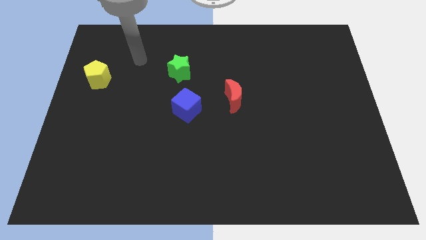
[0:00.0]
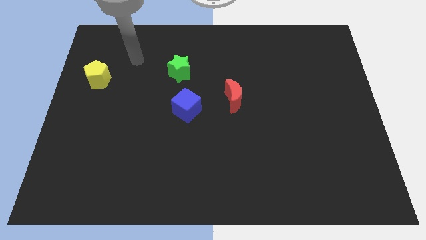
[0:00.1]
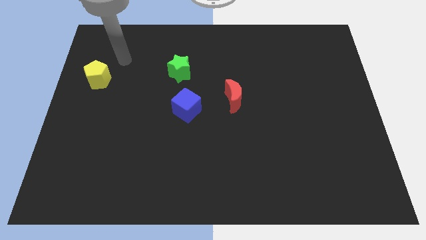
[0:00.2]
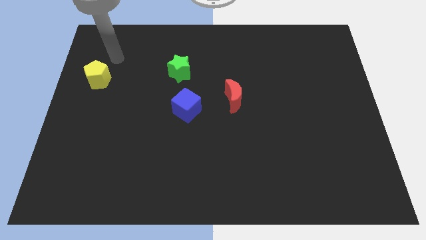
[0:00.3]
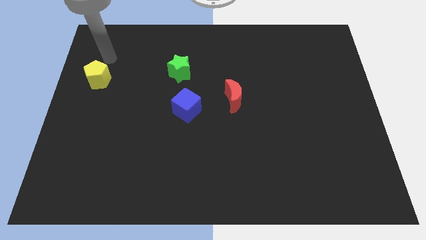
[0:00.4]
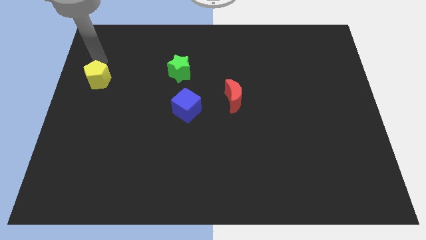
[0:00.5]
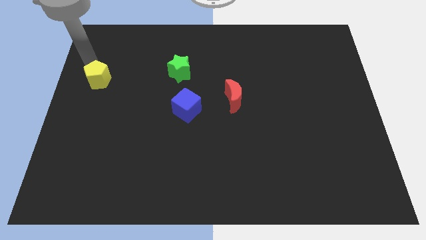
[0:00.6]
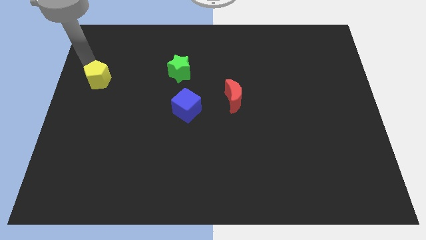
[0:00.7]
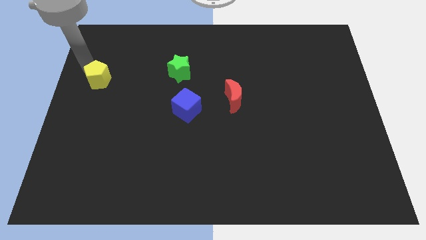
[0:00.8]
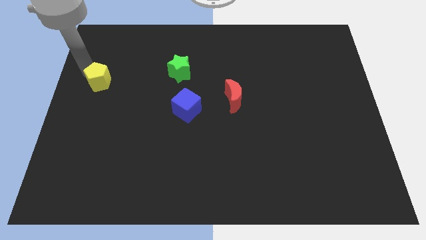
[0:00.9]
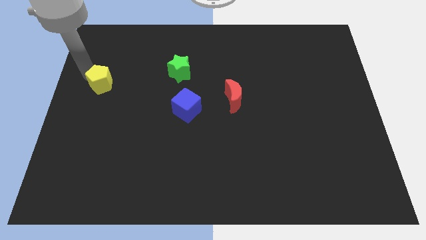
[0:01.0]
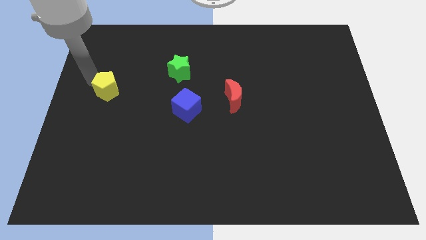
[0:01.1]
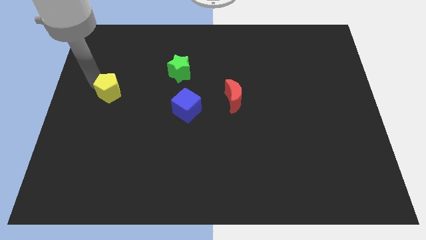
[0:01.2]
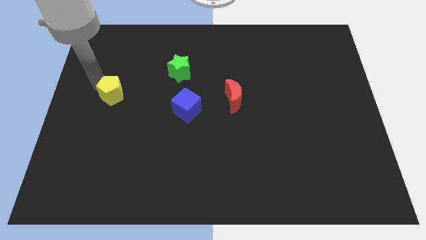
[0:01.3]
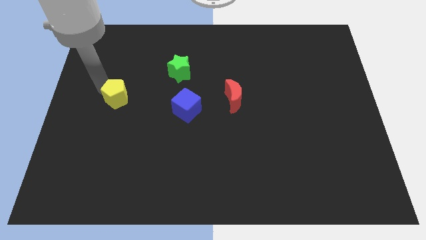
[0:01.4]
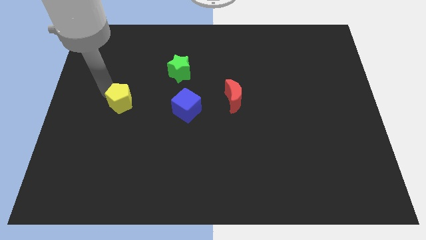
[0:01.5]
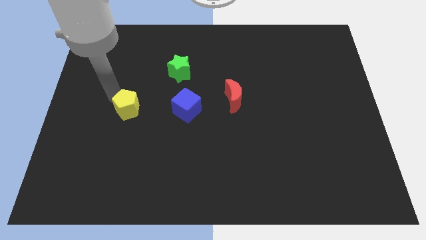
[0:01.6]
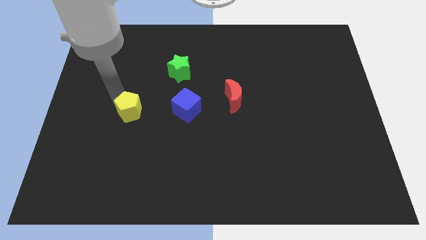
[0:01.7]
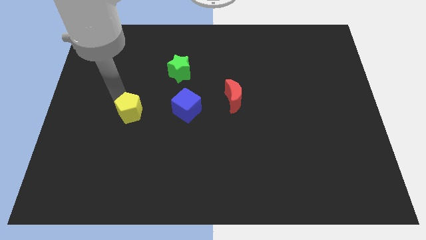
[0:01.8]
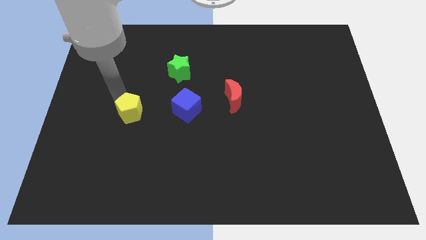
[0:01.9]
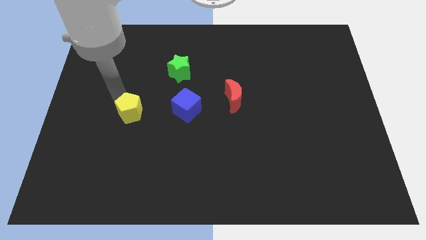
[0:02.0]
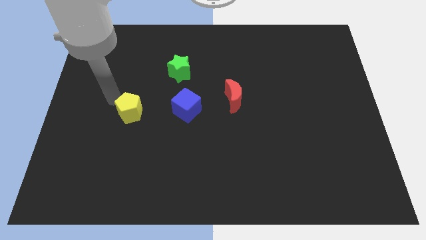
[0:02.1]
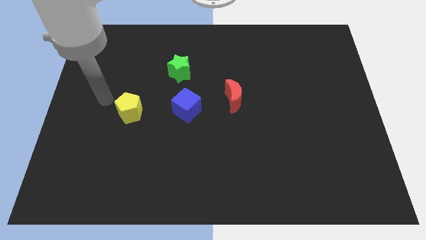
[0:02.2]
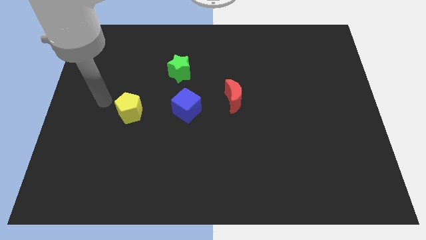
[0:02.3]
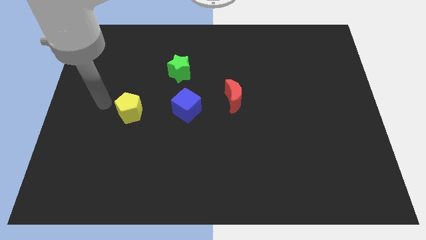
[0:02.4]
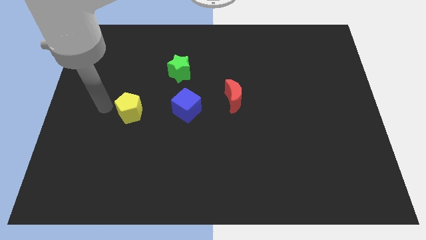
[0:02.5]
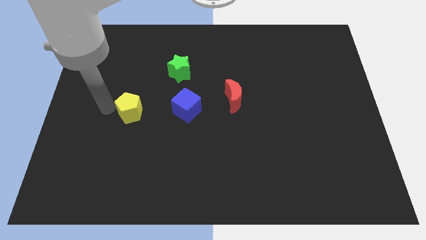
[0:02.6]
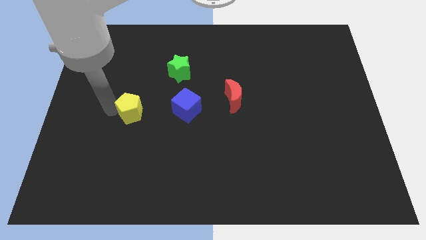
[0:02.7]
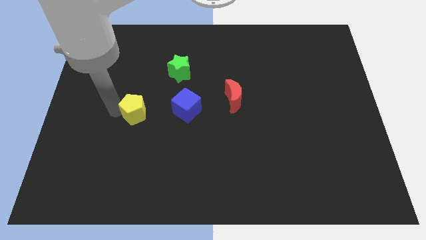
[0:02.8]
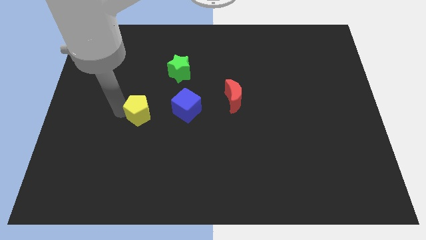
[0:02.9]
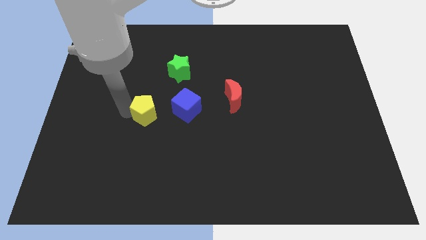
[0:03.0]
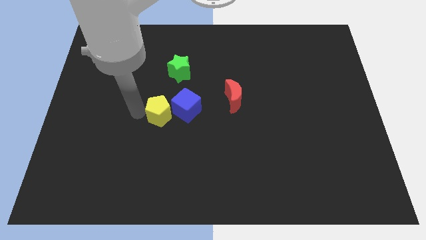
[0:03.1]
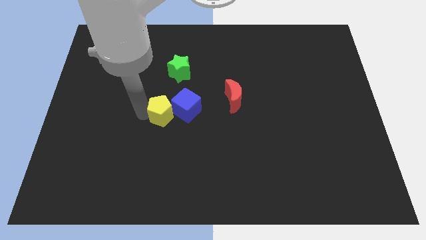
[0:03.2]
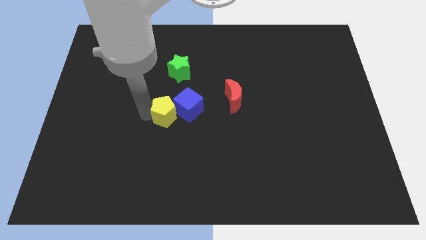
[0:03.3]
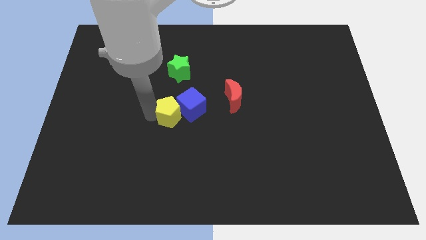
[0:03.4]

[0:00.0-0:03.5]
move the yellow pentagon towards the cube

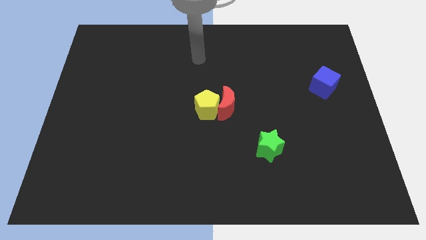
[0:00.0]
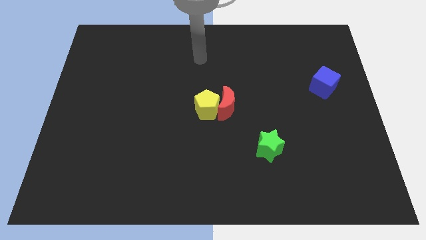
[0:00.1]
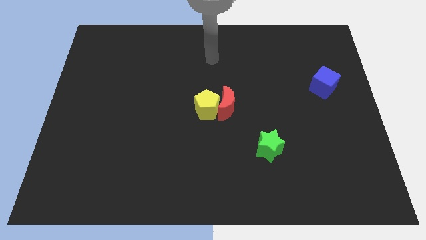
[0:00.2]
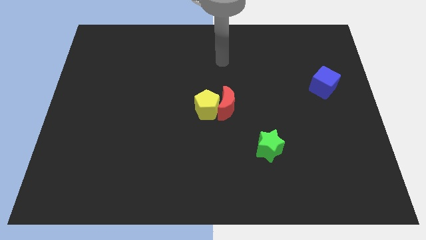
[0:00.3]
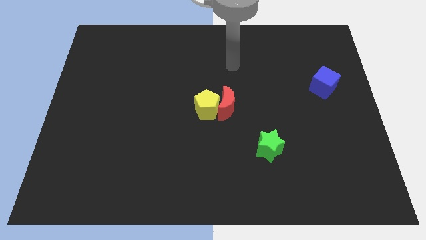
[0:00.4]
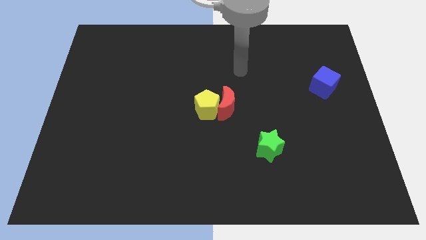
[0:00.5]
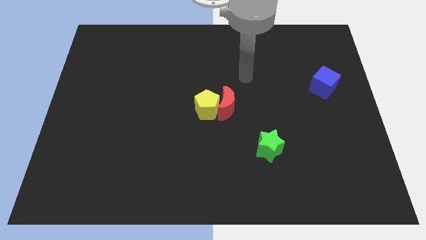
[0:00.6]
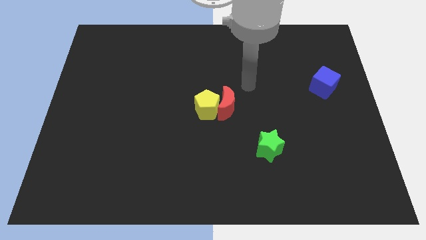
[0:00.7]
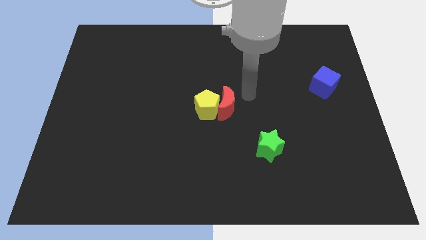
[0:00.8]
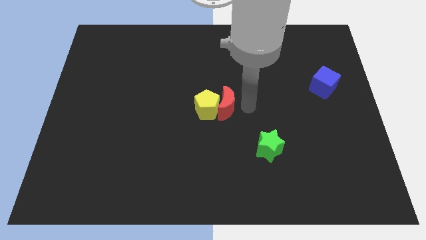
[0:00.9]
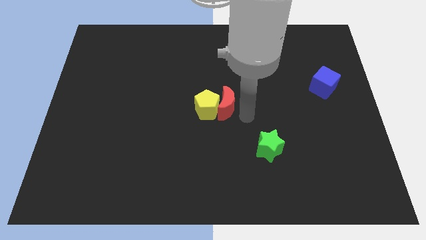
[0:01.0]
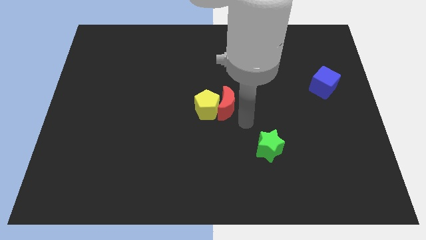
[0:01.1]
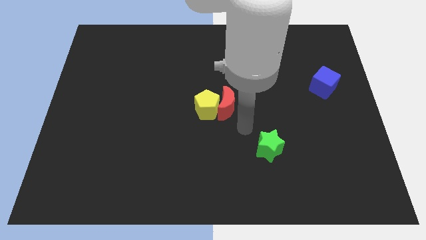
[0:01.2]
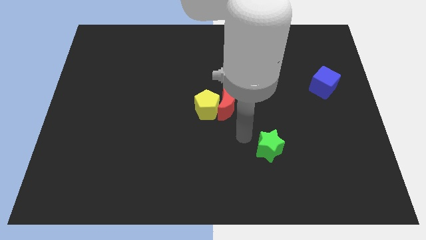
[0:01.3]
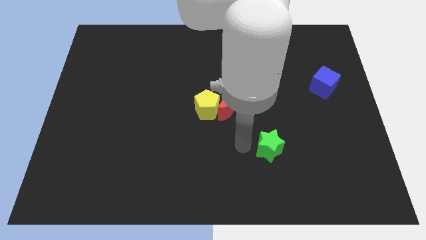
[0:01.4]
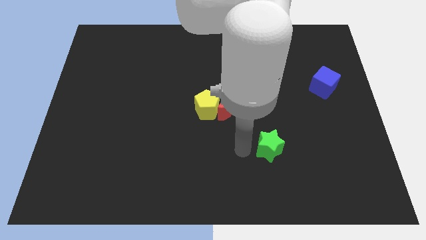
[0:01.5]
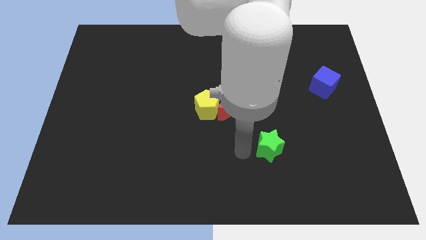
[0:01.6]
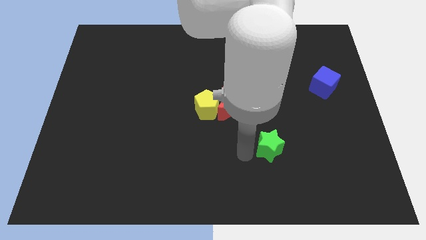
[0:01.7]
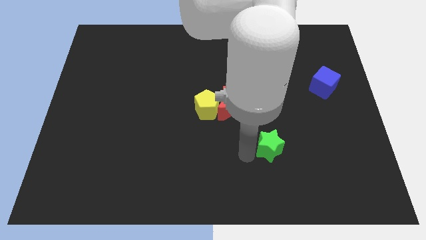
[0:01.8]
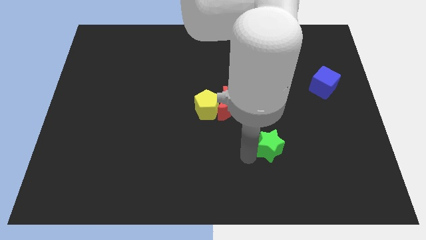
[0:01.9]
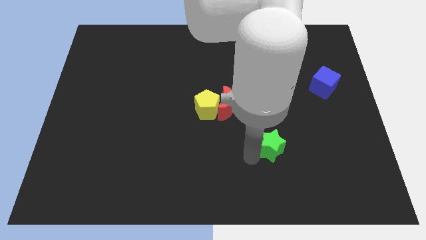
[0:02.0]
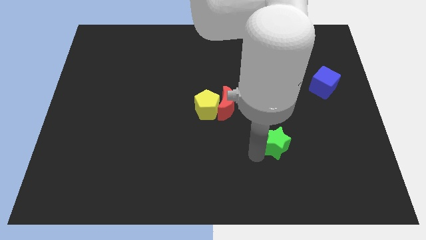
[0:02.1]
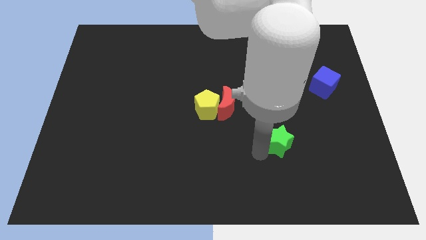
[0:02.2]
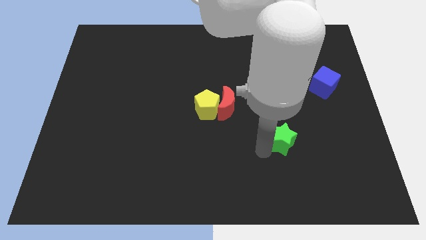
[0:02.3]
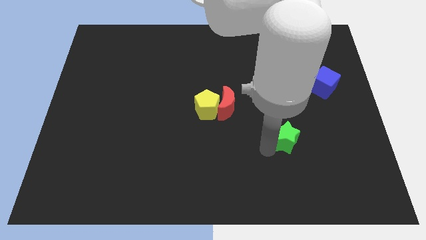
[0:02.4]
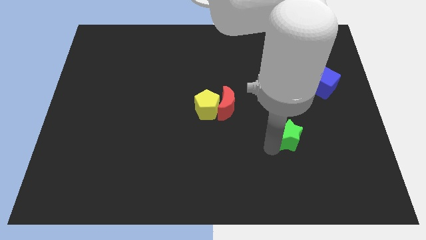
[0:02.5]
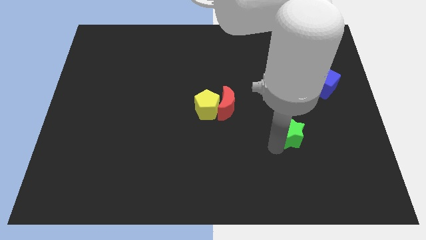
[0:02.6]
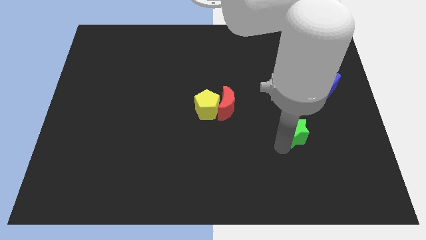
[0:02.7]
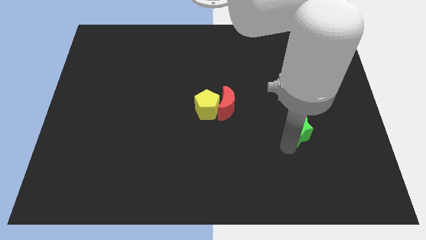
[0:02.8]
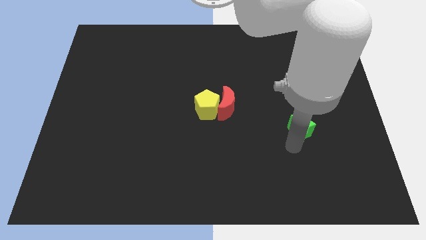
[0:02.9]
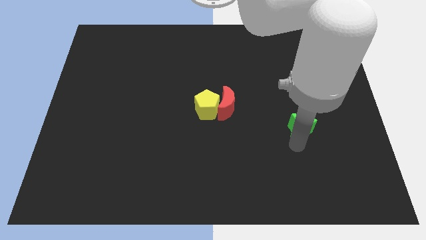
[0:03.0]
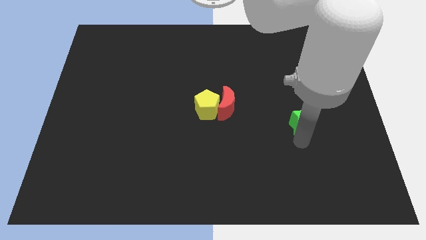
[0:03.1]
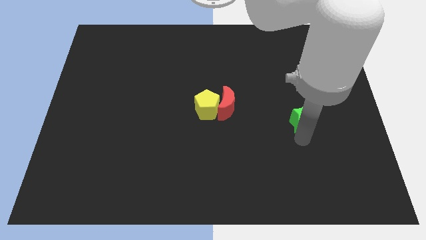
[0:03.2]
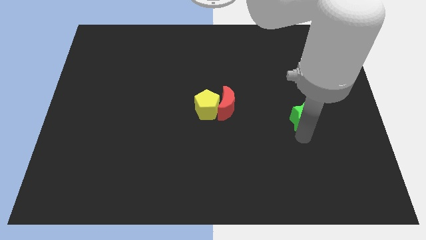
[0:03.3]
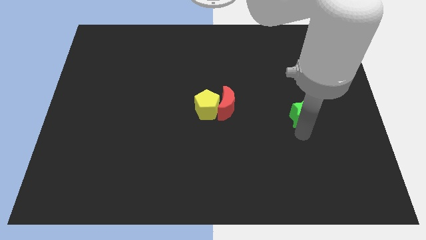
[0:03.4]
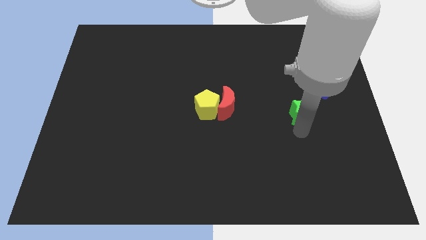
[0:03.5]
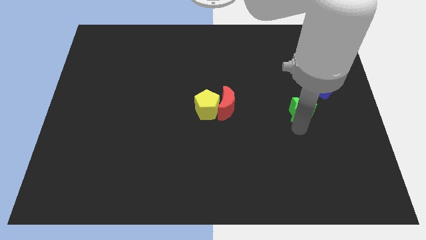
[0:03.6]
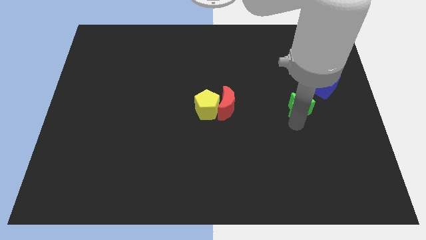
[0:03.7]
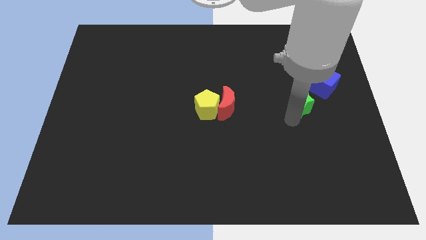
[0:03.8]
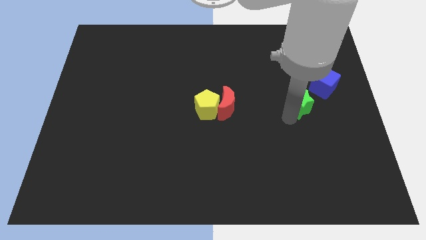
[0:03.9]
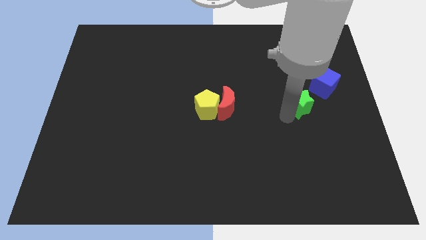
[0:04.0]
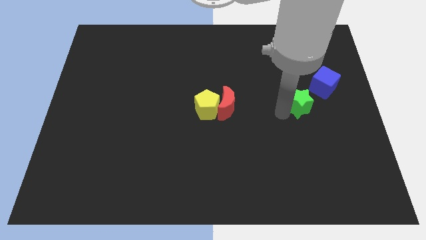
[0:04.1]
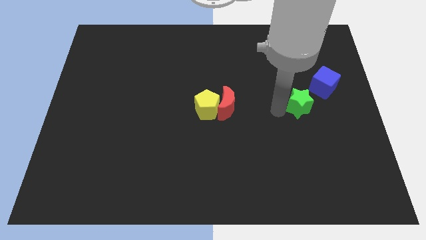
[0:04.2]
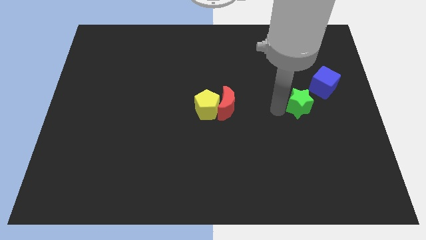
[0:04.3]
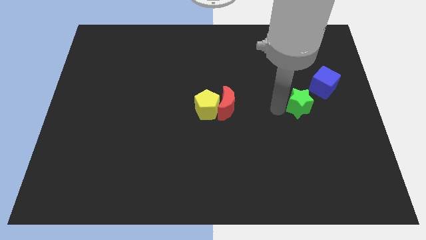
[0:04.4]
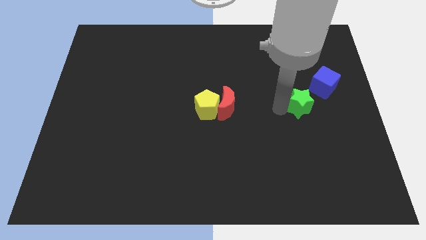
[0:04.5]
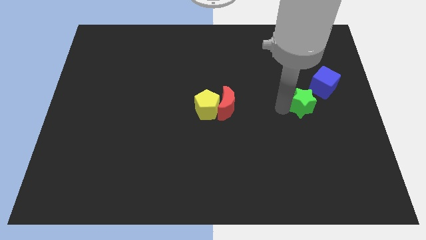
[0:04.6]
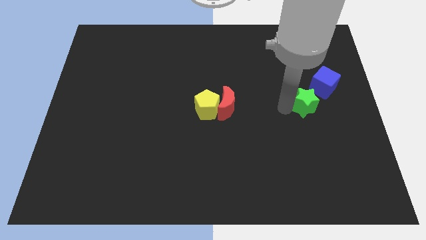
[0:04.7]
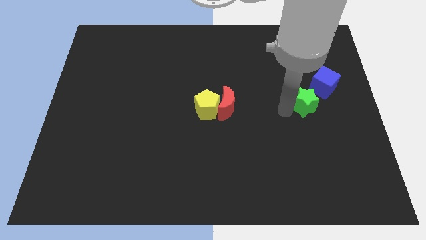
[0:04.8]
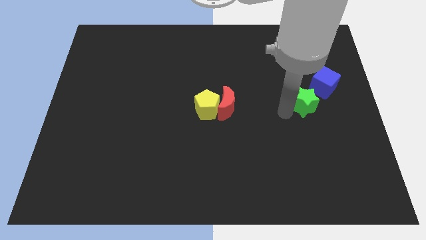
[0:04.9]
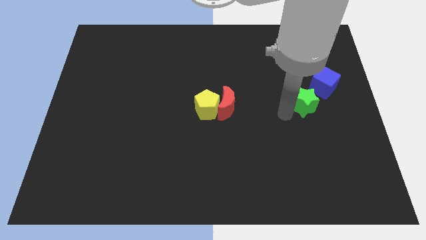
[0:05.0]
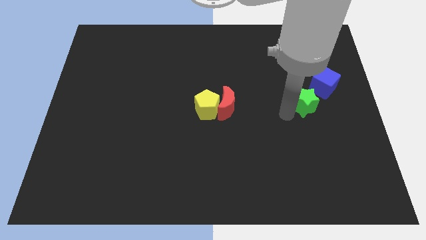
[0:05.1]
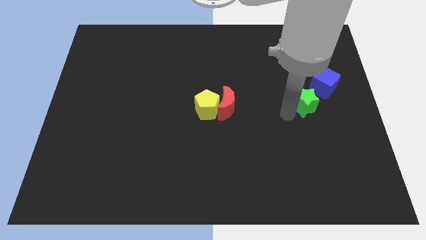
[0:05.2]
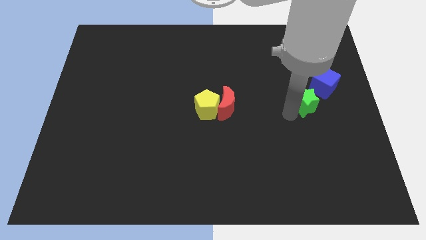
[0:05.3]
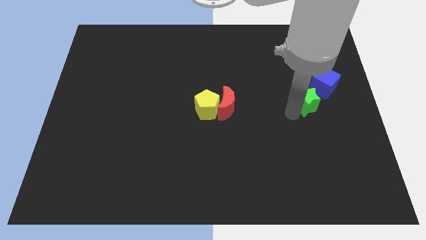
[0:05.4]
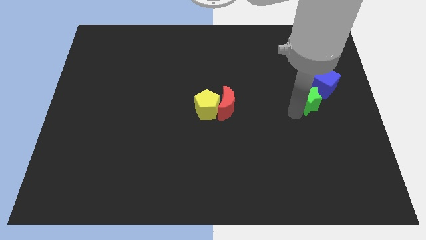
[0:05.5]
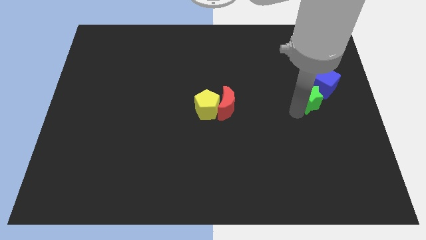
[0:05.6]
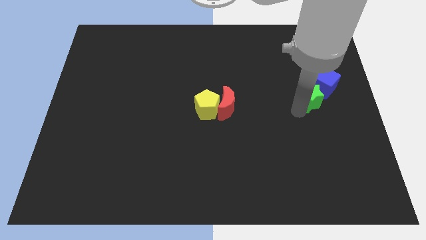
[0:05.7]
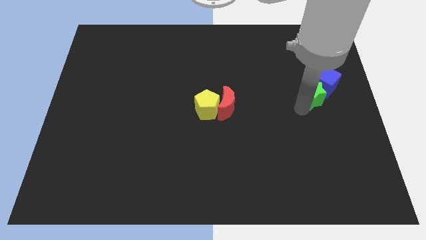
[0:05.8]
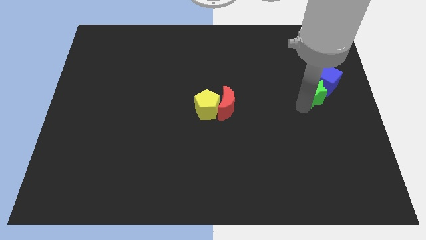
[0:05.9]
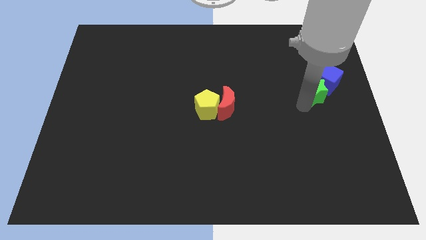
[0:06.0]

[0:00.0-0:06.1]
push the green block towards the blue cube
